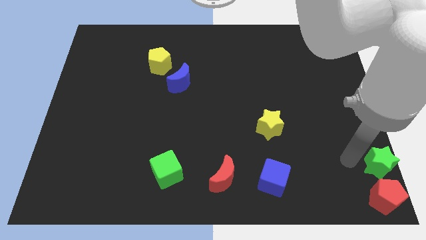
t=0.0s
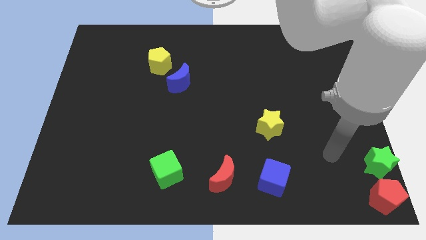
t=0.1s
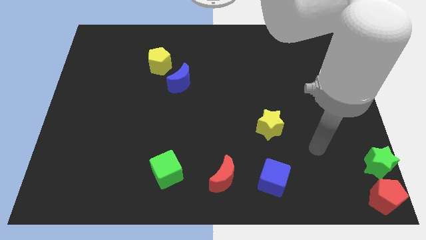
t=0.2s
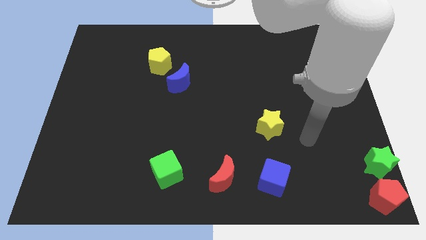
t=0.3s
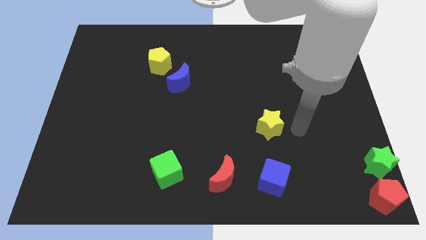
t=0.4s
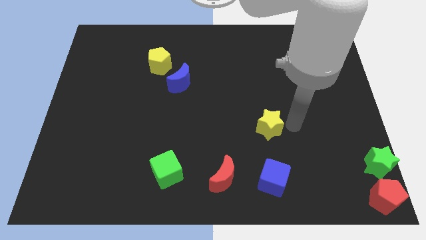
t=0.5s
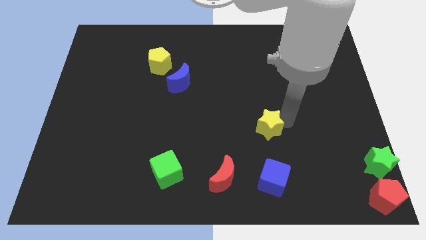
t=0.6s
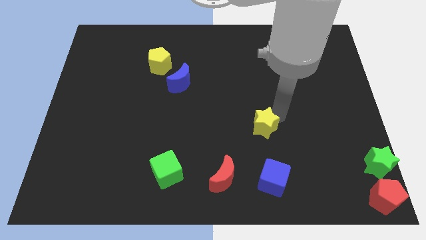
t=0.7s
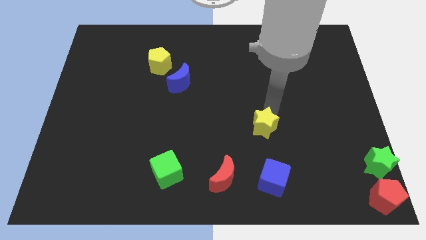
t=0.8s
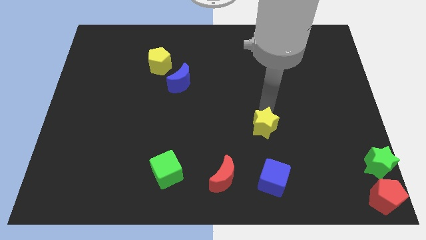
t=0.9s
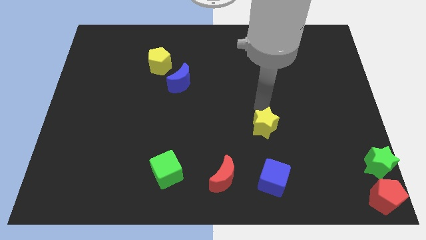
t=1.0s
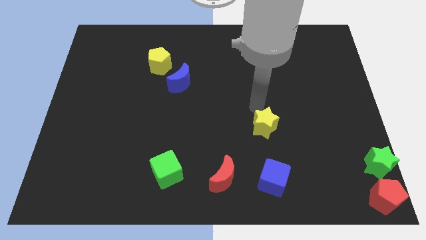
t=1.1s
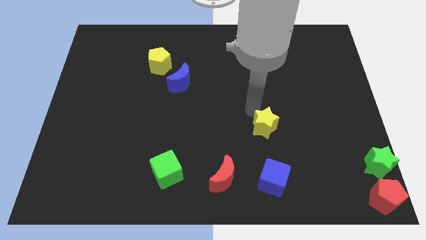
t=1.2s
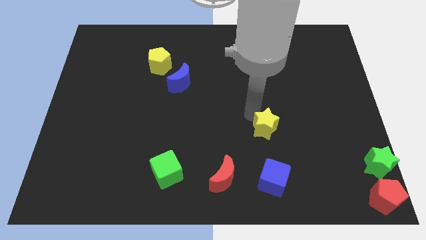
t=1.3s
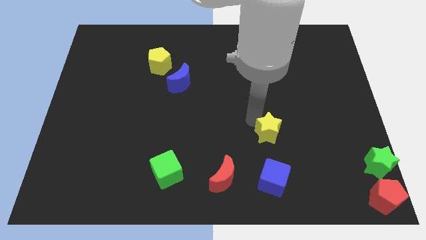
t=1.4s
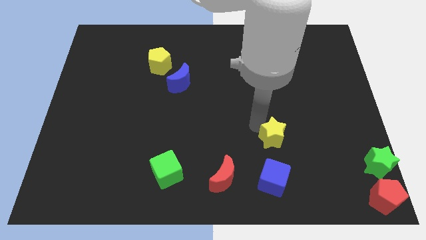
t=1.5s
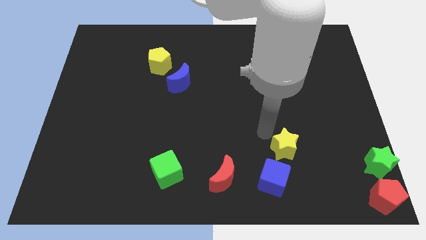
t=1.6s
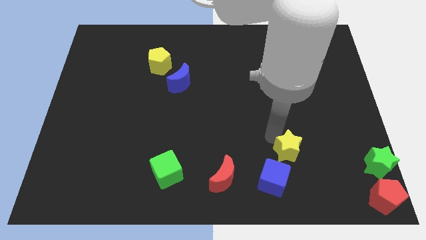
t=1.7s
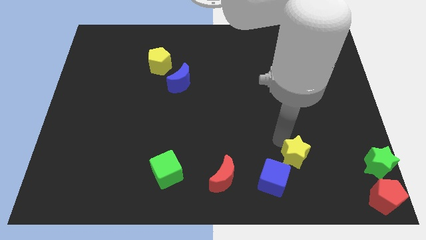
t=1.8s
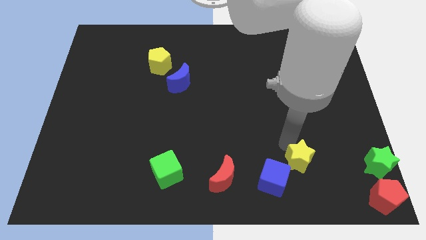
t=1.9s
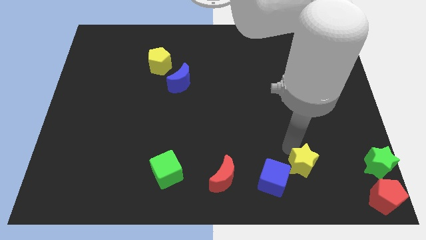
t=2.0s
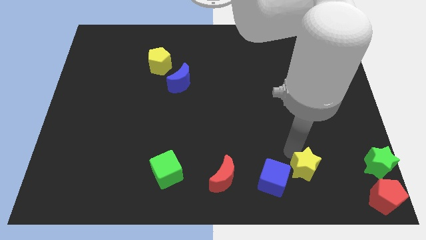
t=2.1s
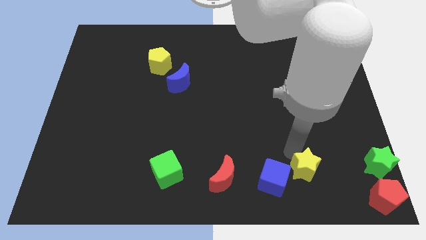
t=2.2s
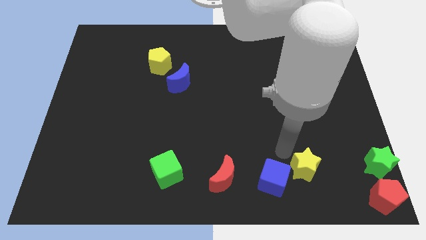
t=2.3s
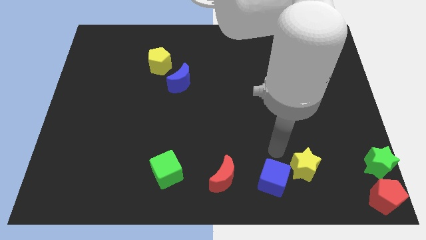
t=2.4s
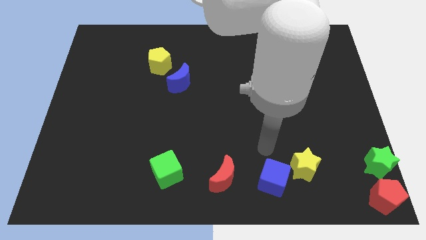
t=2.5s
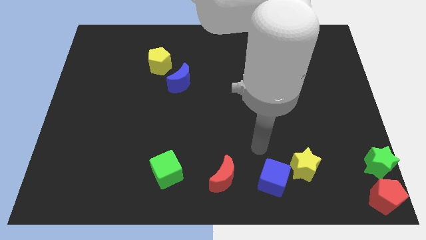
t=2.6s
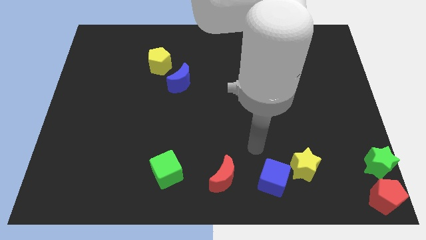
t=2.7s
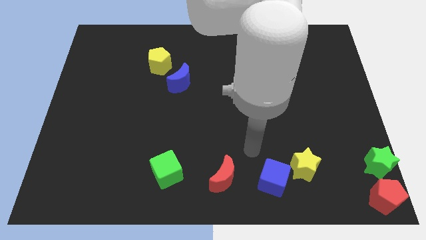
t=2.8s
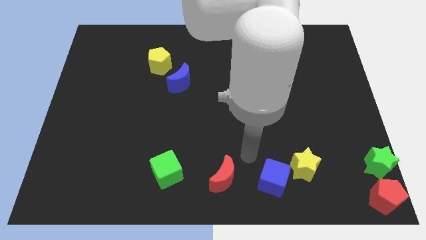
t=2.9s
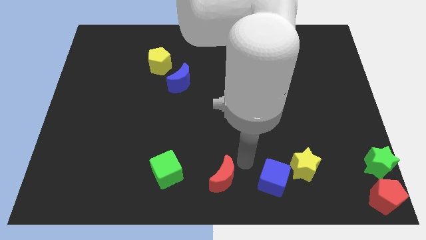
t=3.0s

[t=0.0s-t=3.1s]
push yellow star towards the right of the blue cube

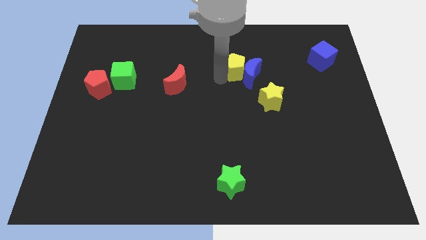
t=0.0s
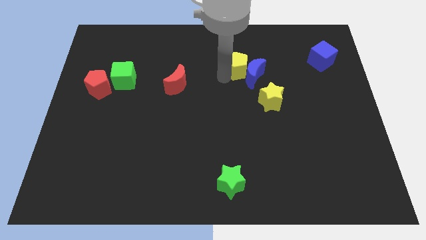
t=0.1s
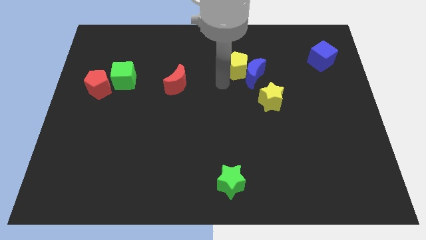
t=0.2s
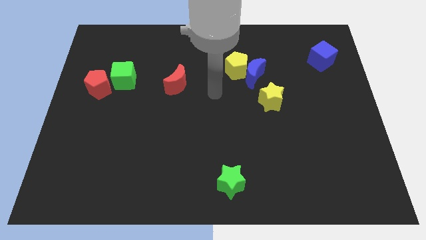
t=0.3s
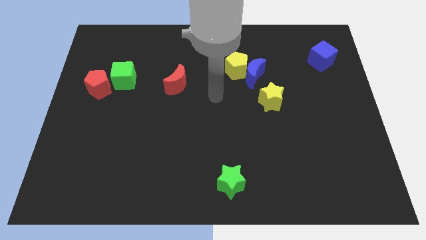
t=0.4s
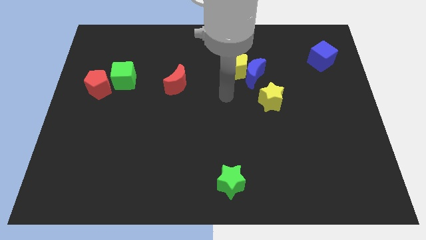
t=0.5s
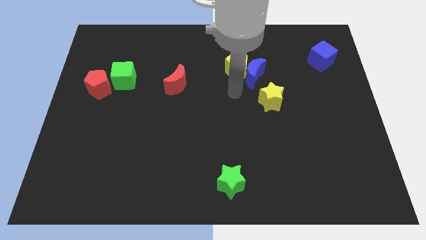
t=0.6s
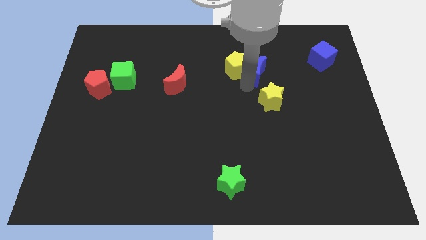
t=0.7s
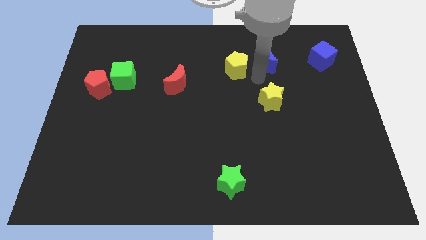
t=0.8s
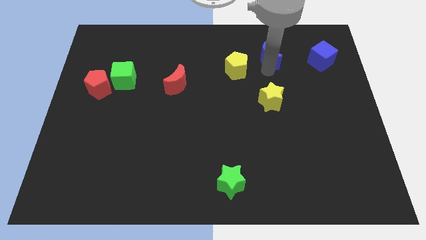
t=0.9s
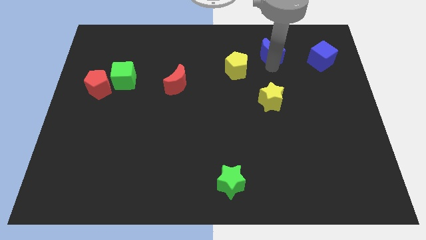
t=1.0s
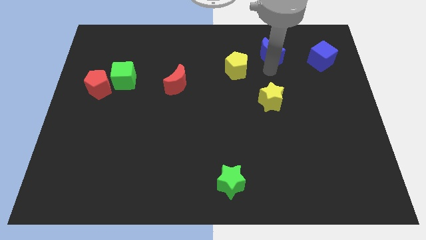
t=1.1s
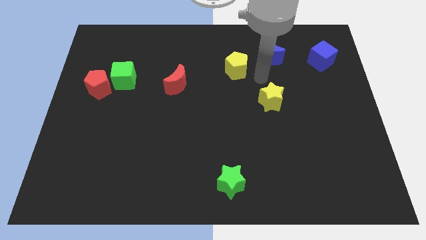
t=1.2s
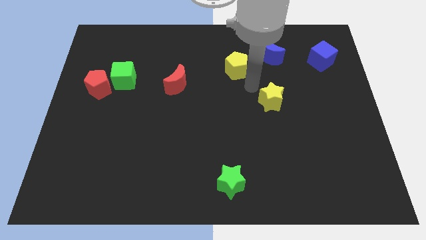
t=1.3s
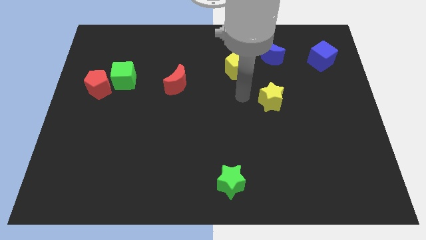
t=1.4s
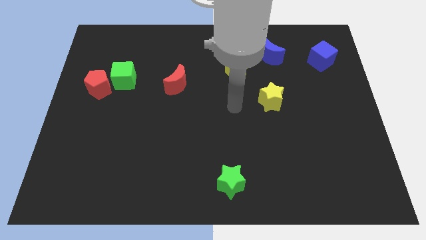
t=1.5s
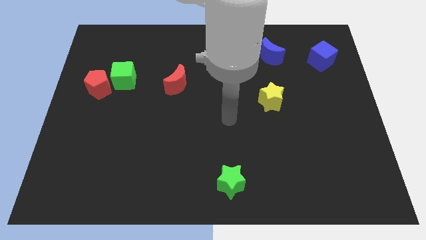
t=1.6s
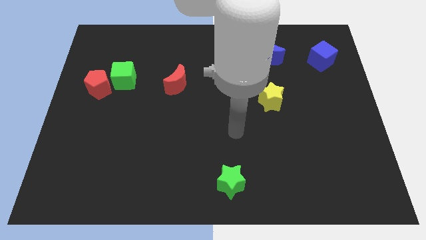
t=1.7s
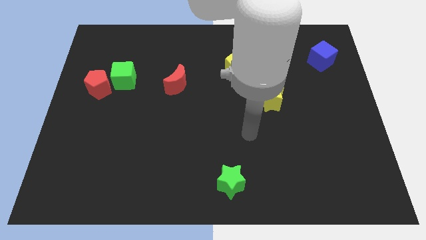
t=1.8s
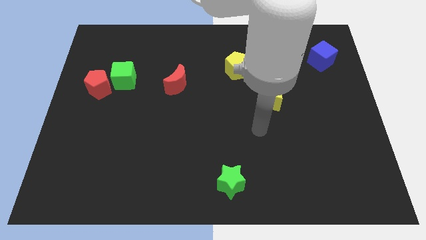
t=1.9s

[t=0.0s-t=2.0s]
separate the blue moon from the yellow pentagon

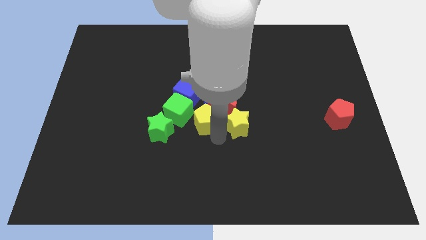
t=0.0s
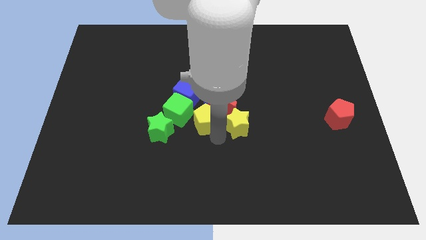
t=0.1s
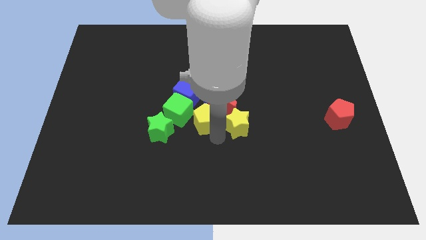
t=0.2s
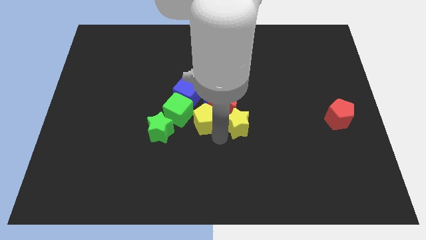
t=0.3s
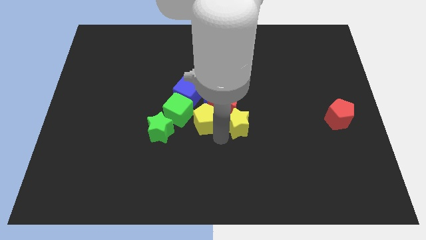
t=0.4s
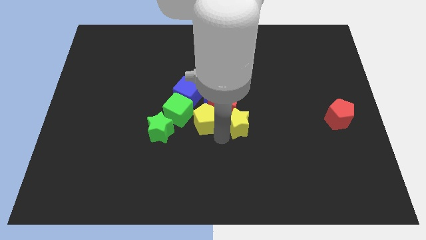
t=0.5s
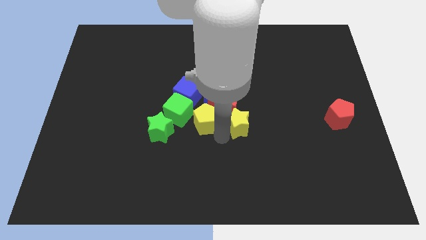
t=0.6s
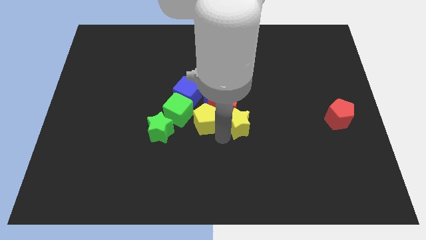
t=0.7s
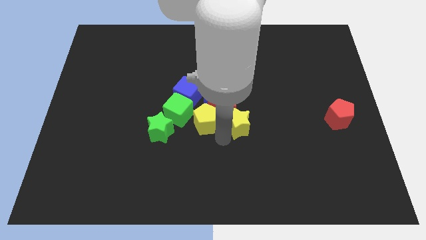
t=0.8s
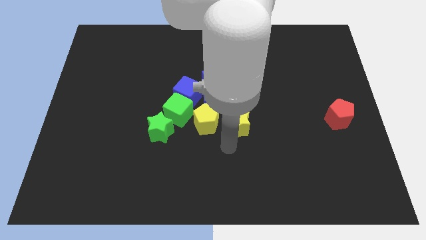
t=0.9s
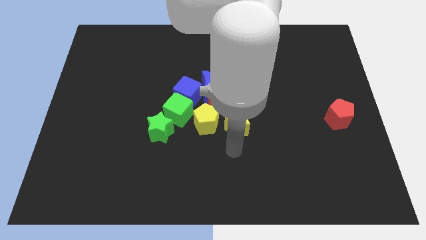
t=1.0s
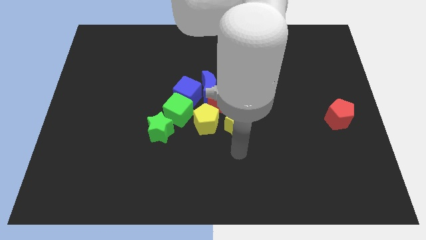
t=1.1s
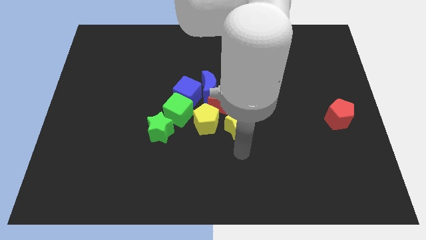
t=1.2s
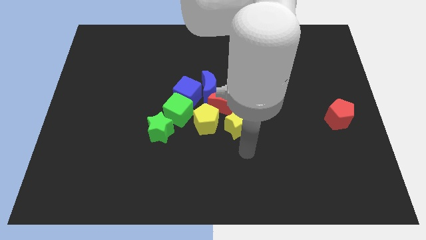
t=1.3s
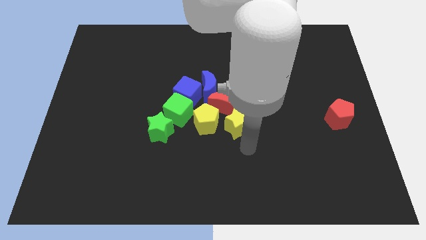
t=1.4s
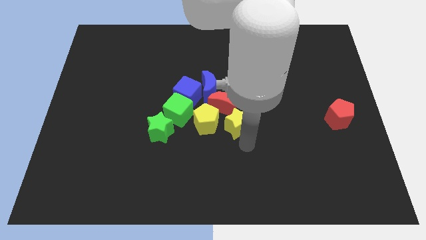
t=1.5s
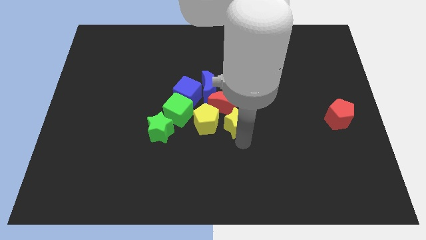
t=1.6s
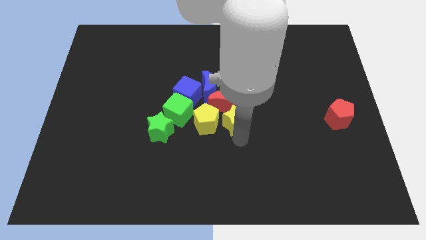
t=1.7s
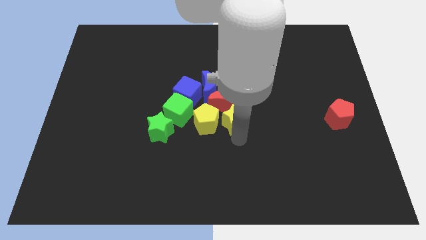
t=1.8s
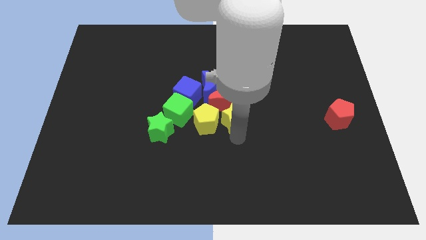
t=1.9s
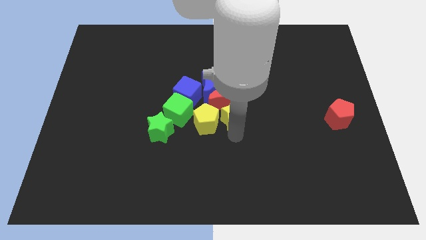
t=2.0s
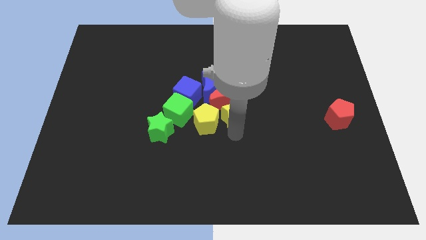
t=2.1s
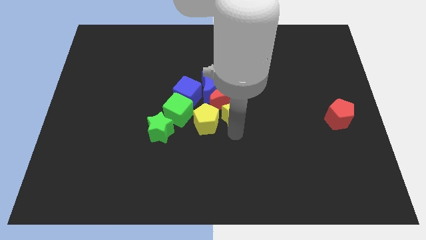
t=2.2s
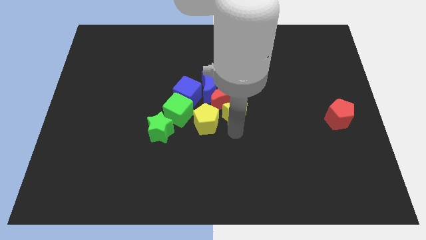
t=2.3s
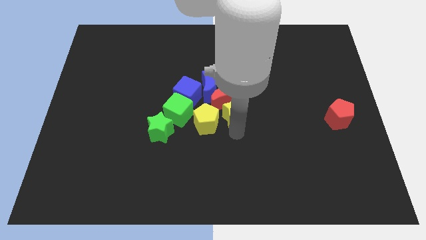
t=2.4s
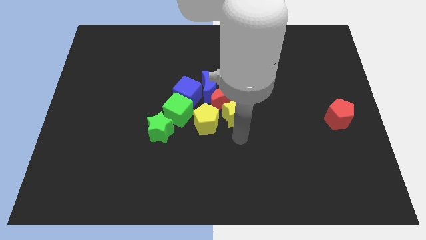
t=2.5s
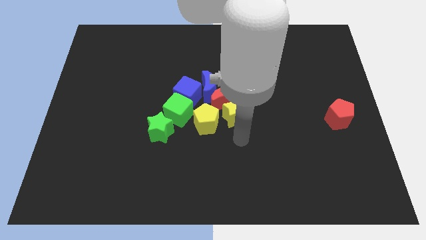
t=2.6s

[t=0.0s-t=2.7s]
push yellow star slightly towards red crescent

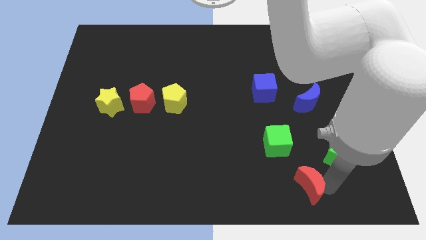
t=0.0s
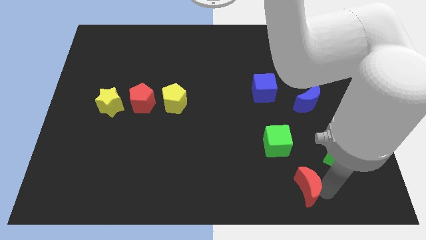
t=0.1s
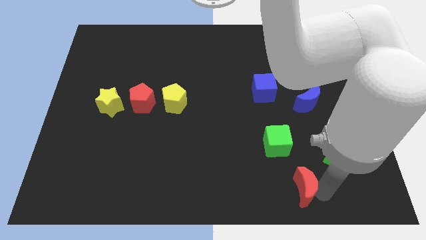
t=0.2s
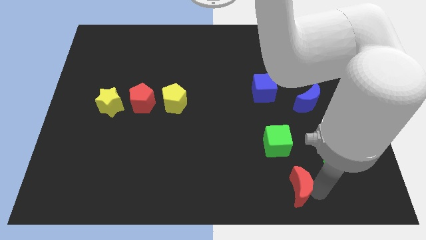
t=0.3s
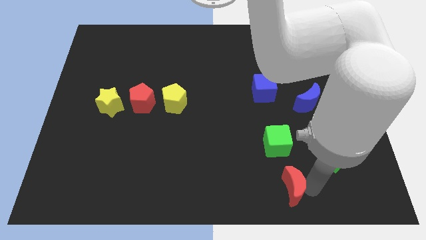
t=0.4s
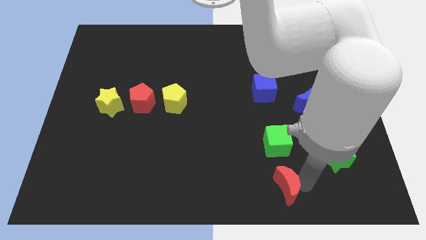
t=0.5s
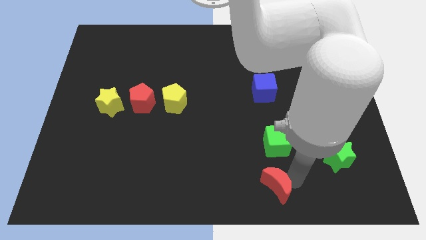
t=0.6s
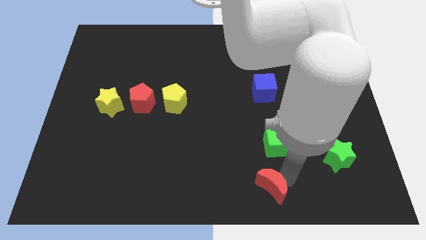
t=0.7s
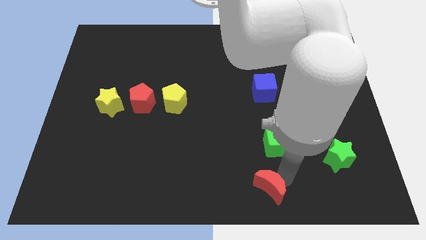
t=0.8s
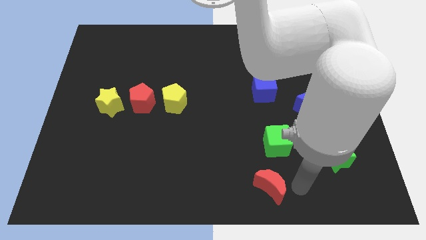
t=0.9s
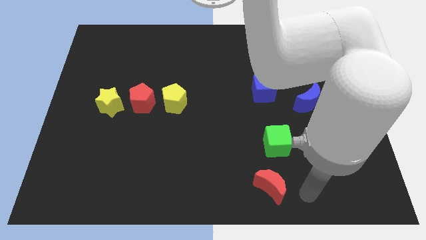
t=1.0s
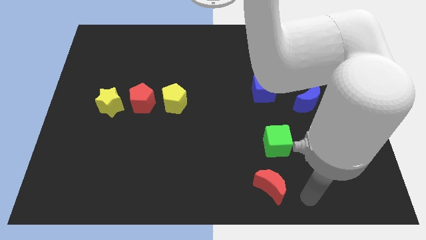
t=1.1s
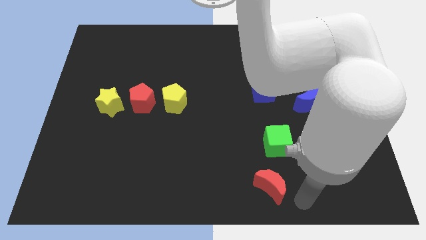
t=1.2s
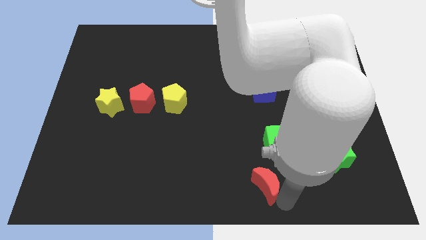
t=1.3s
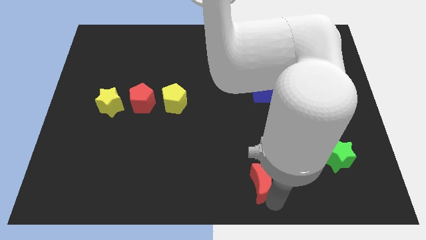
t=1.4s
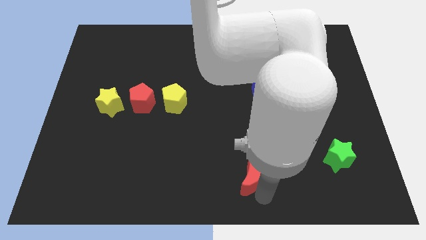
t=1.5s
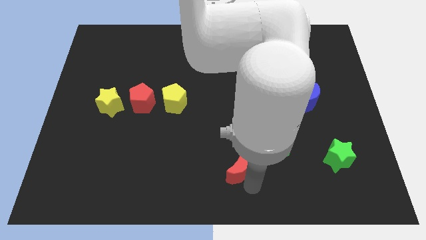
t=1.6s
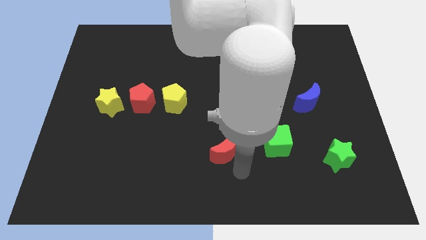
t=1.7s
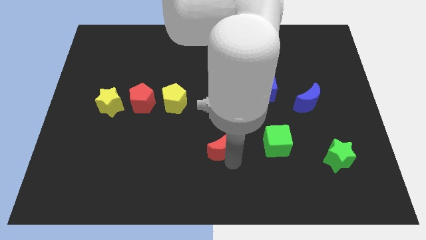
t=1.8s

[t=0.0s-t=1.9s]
place the red crescent left of green cube
